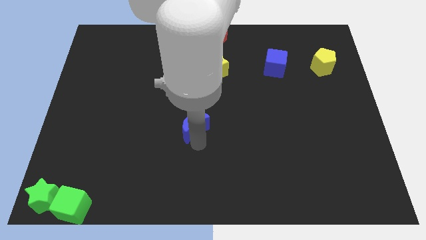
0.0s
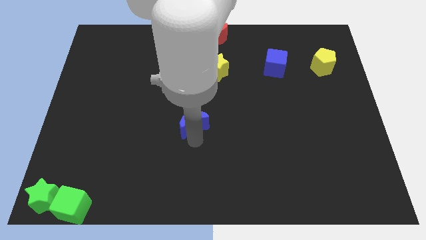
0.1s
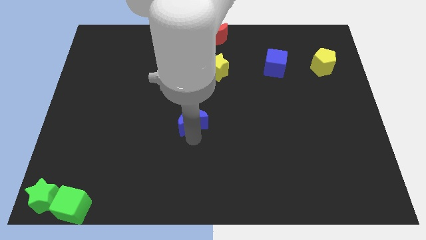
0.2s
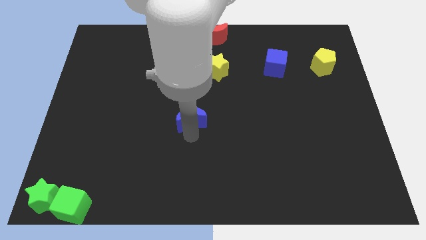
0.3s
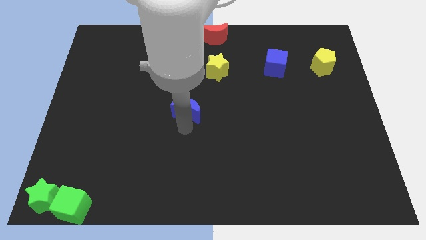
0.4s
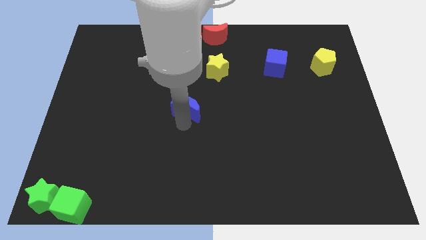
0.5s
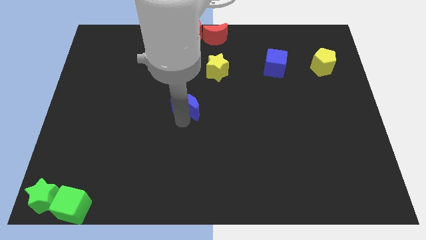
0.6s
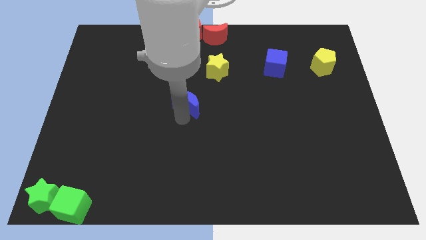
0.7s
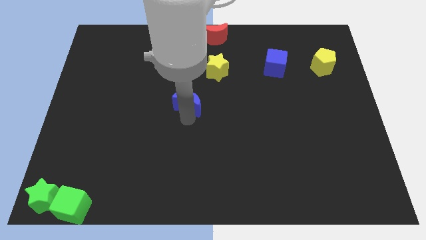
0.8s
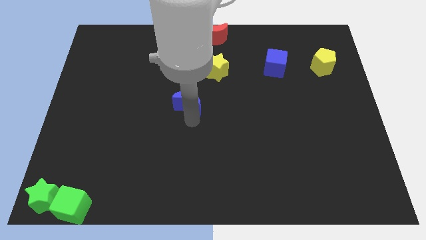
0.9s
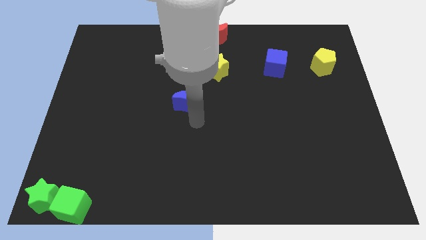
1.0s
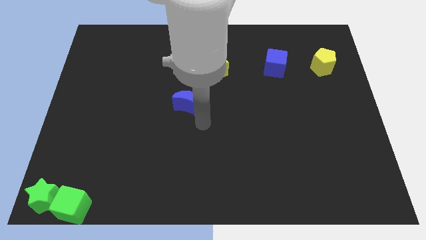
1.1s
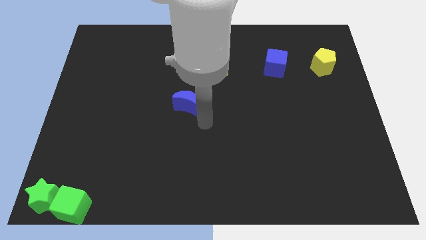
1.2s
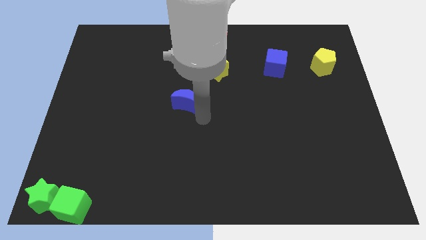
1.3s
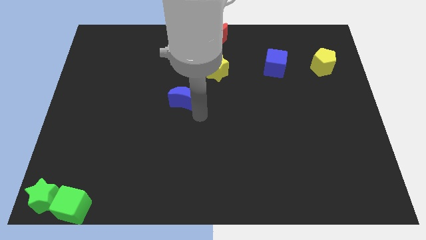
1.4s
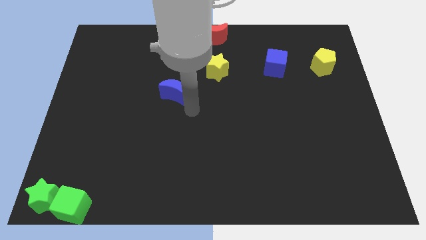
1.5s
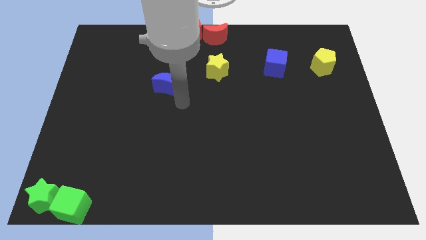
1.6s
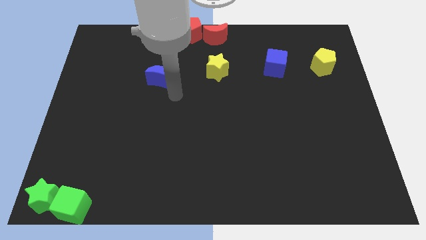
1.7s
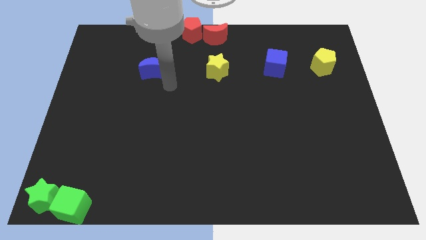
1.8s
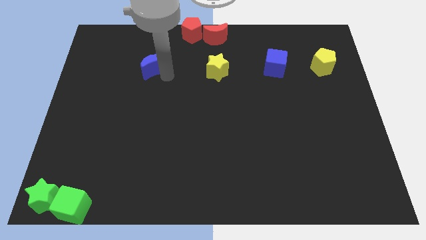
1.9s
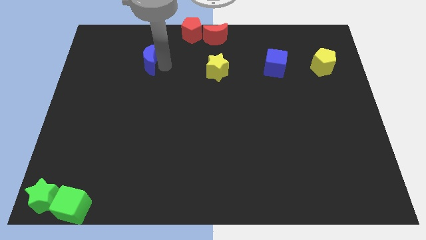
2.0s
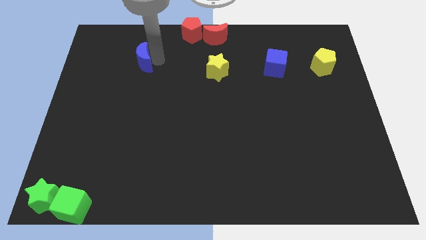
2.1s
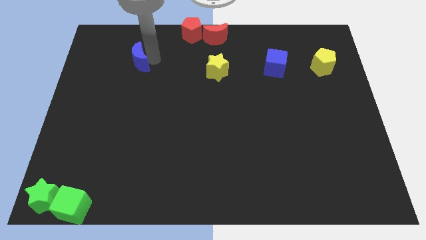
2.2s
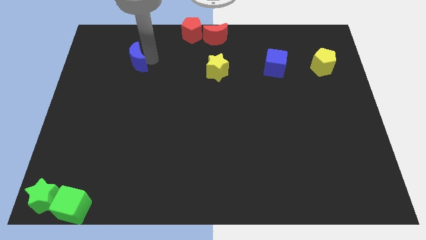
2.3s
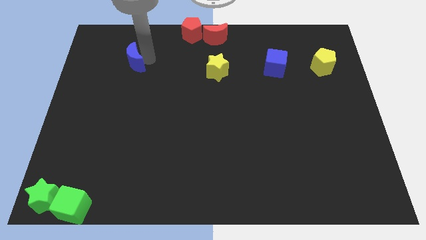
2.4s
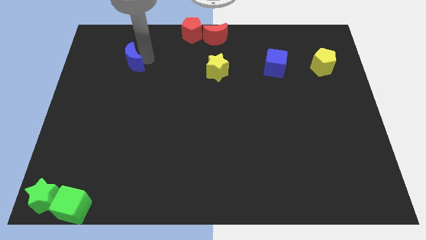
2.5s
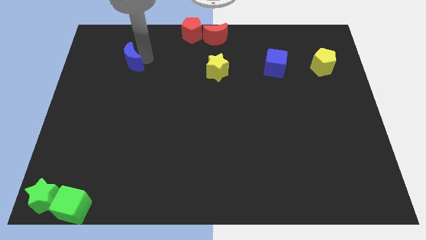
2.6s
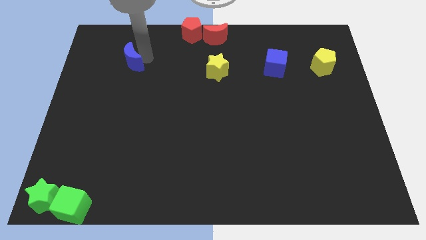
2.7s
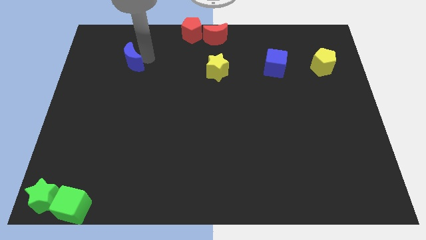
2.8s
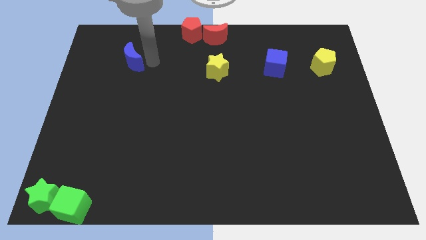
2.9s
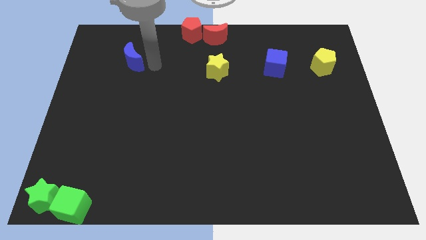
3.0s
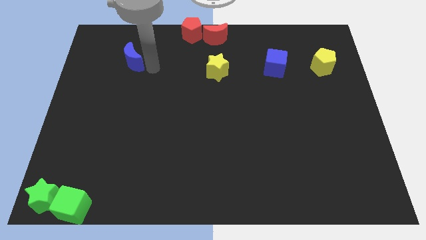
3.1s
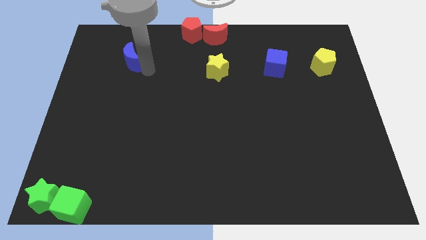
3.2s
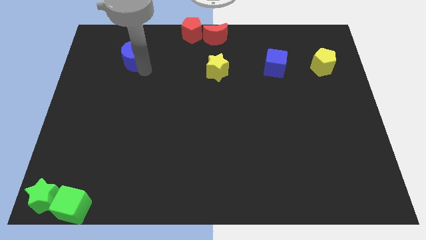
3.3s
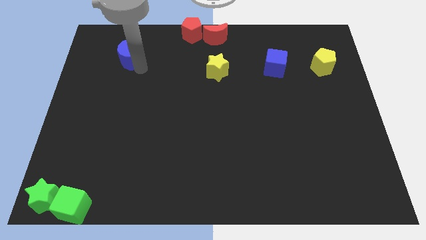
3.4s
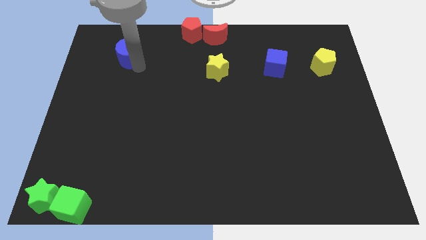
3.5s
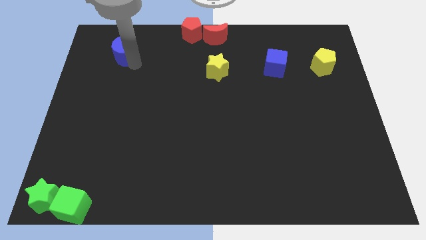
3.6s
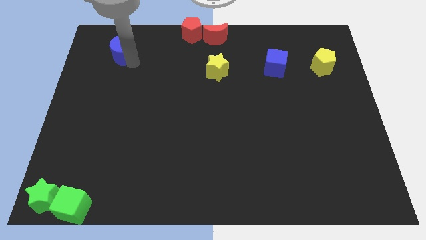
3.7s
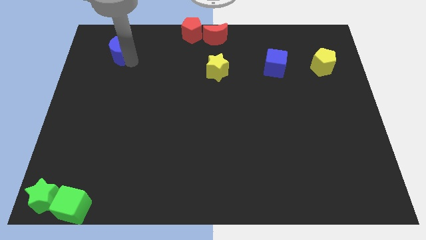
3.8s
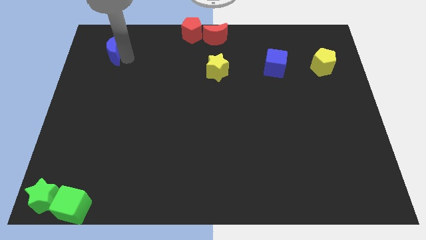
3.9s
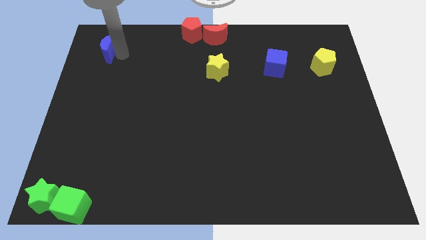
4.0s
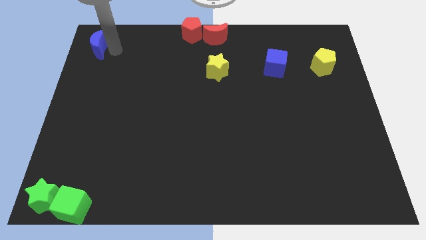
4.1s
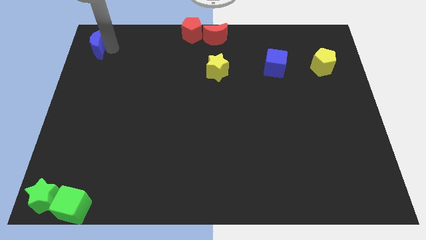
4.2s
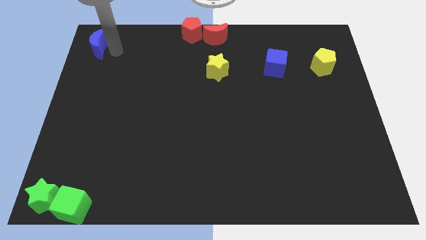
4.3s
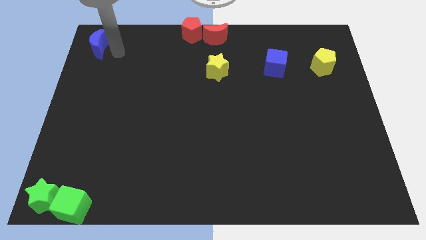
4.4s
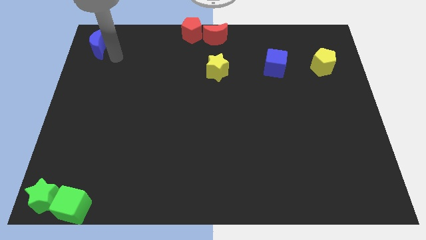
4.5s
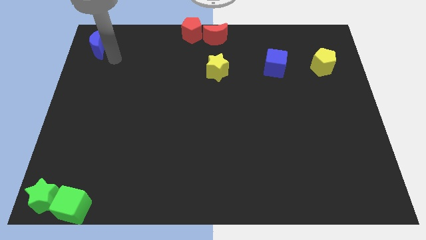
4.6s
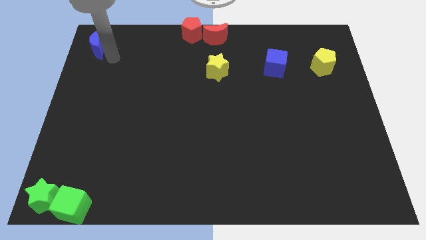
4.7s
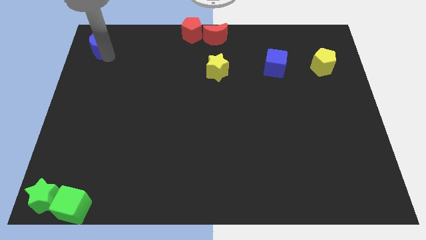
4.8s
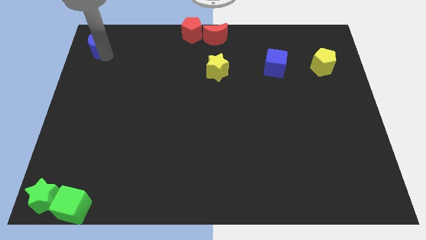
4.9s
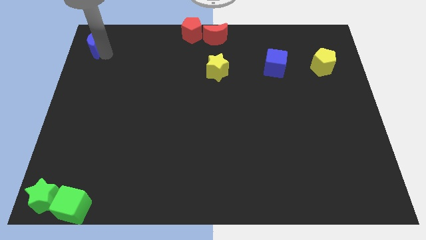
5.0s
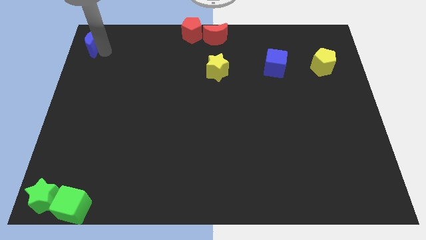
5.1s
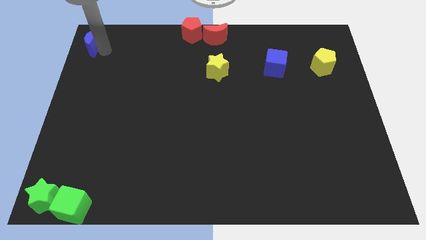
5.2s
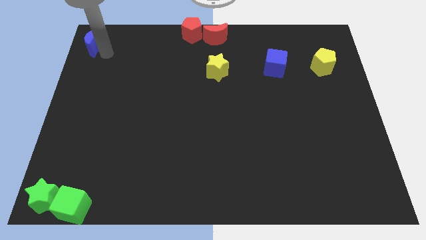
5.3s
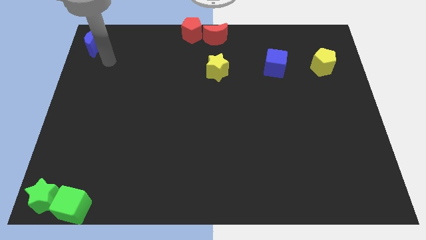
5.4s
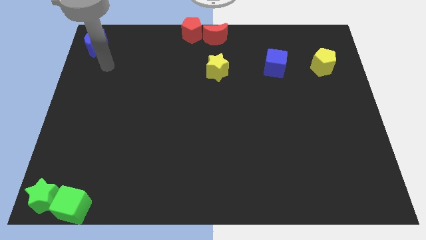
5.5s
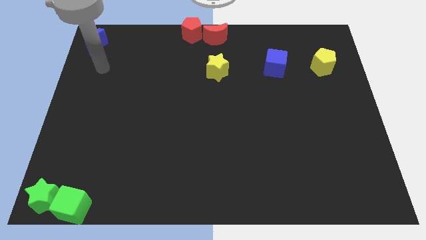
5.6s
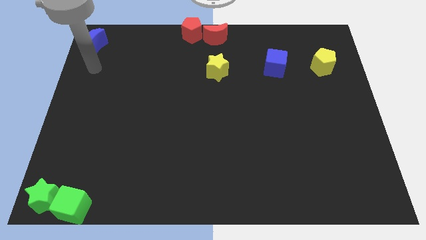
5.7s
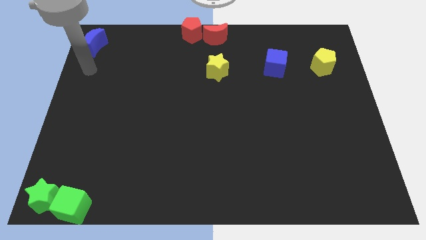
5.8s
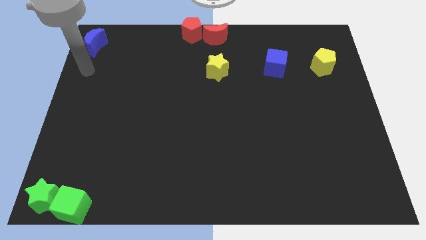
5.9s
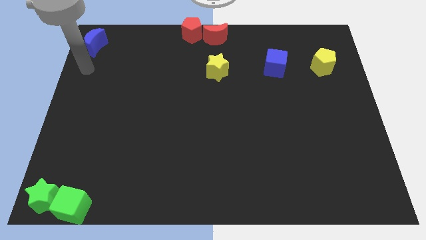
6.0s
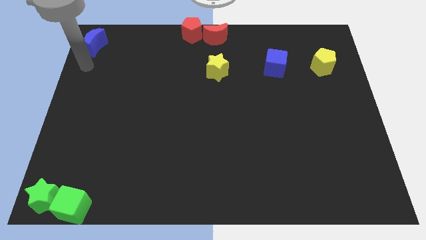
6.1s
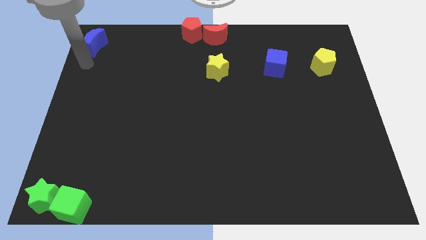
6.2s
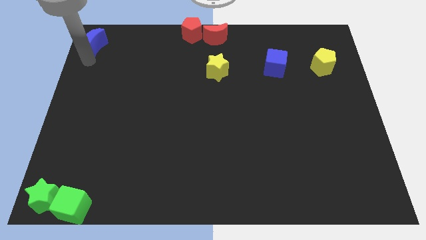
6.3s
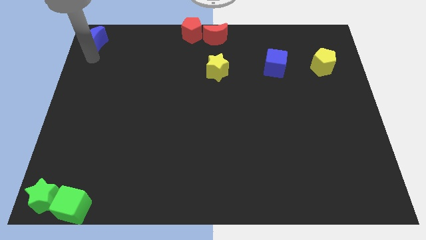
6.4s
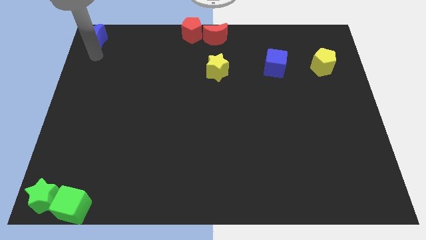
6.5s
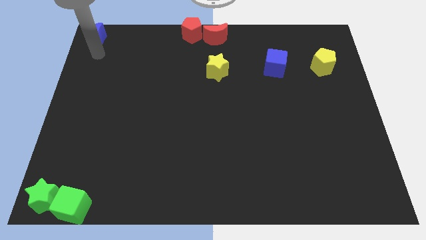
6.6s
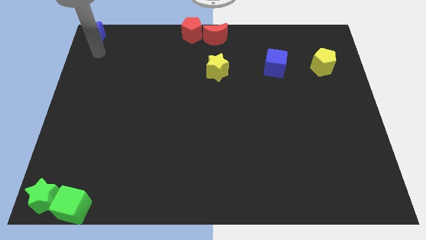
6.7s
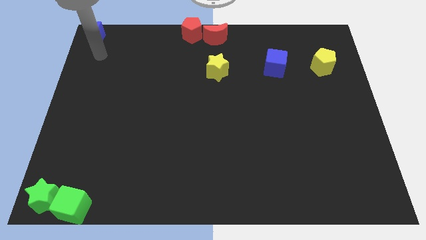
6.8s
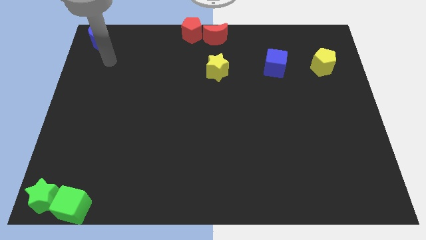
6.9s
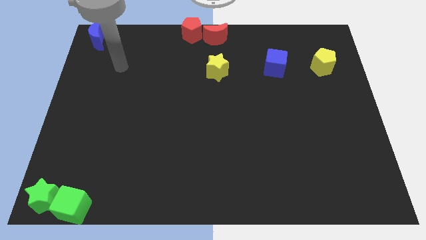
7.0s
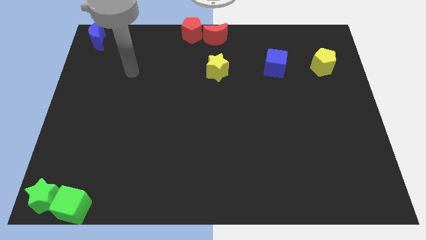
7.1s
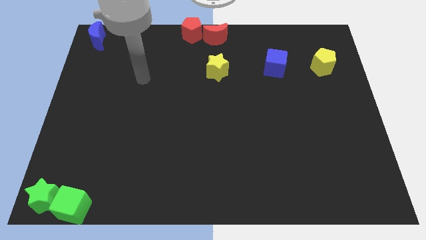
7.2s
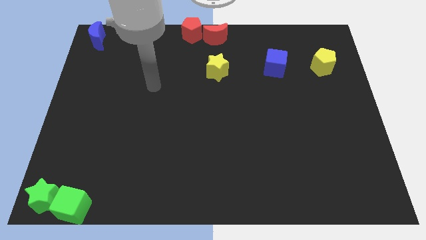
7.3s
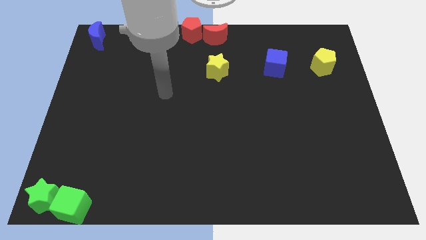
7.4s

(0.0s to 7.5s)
move the blue moon to the top left corner

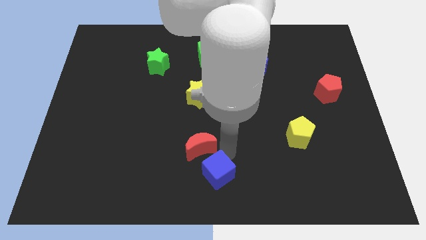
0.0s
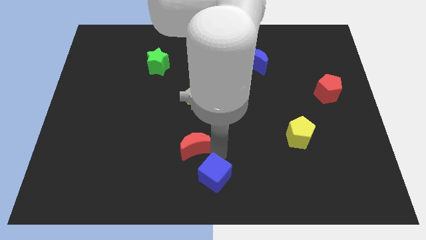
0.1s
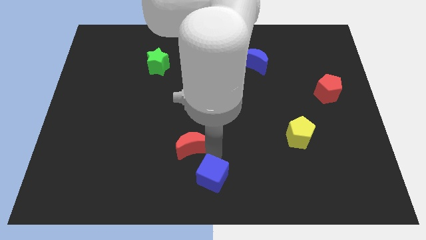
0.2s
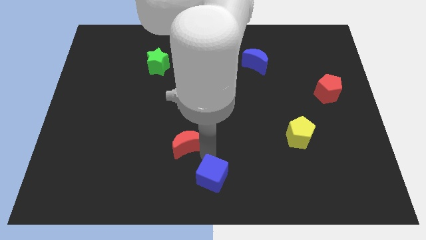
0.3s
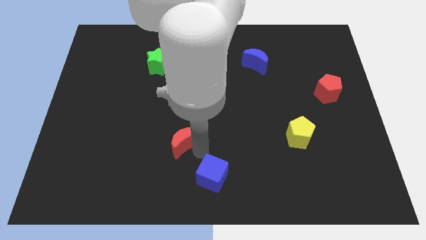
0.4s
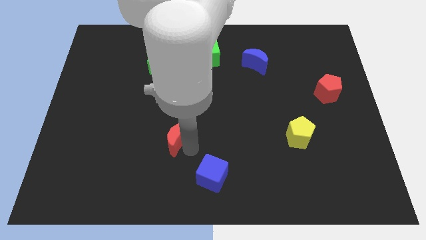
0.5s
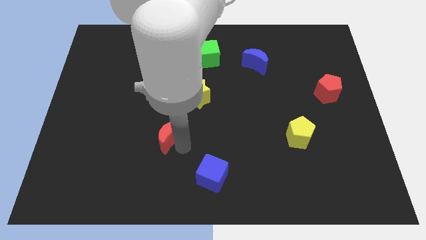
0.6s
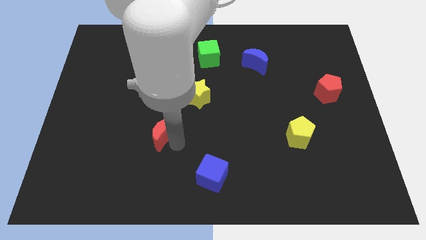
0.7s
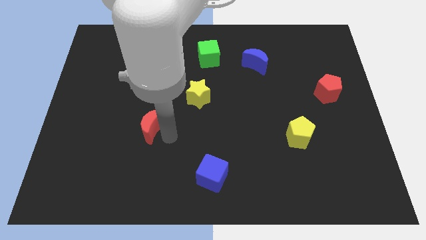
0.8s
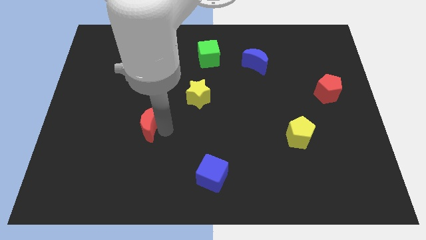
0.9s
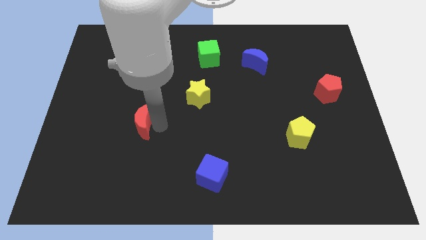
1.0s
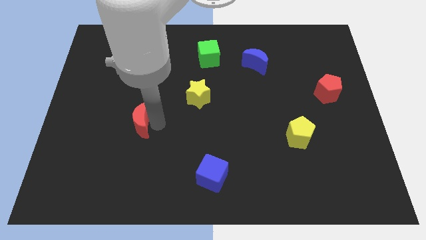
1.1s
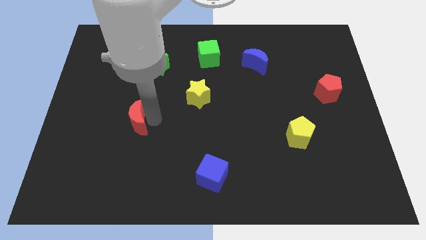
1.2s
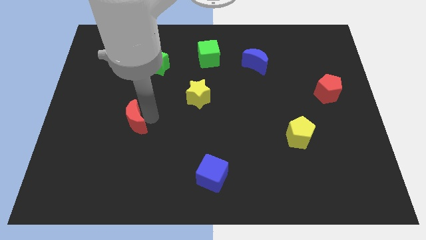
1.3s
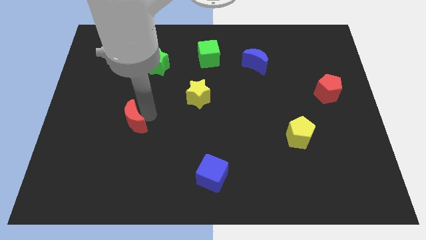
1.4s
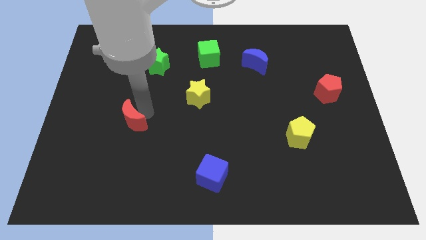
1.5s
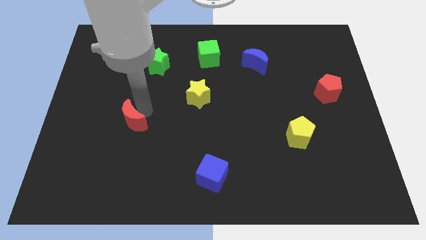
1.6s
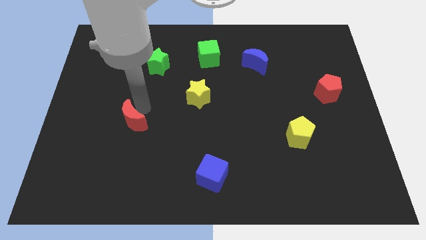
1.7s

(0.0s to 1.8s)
place the red moon diagonally towards the left of yellow star
